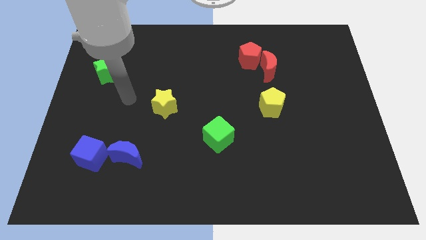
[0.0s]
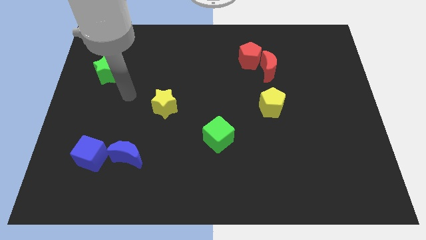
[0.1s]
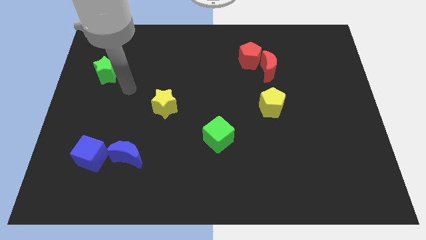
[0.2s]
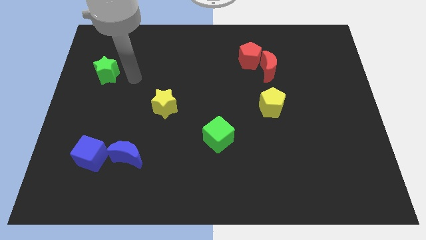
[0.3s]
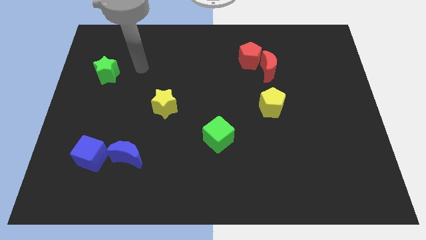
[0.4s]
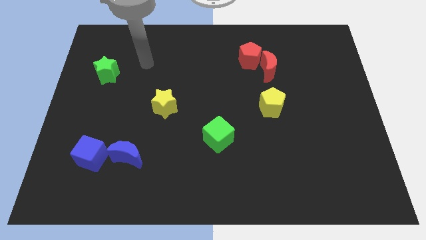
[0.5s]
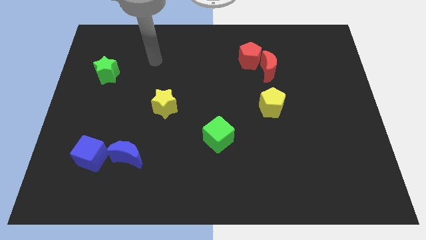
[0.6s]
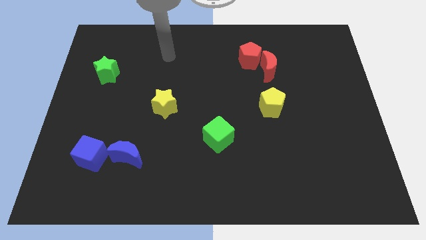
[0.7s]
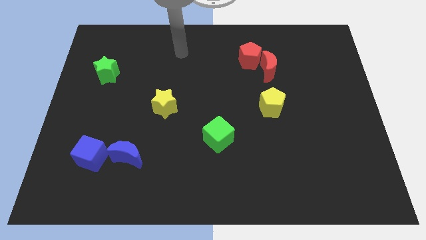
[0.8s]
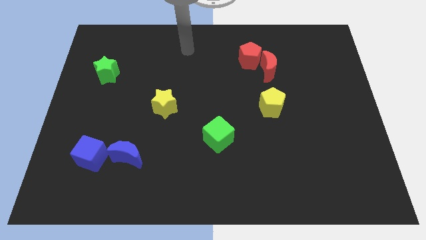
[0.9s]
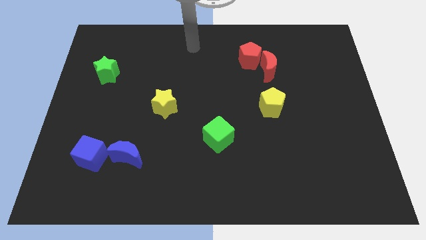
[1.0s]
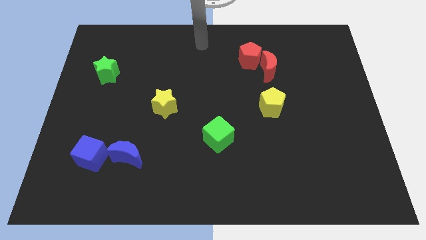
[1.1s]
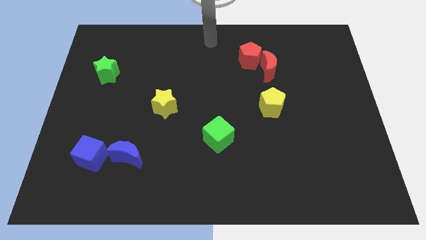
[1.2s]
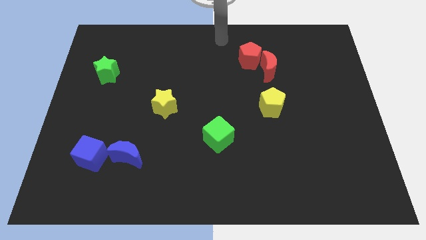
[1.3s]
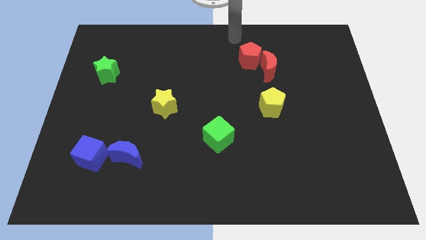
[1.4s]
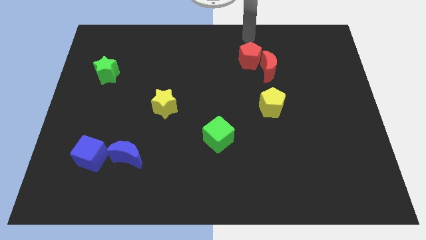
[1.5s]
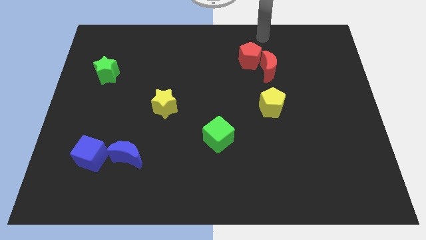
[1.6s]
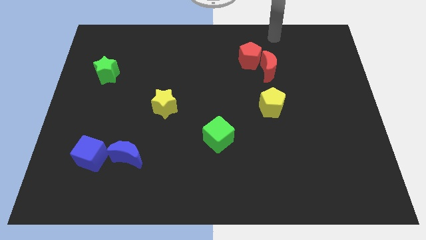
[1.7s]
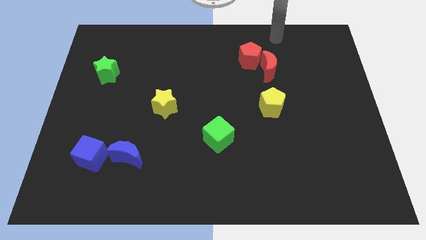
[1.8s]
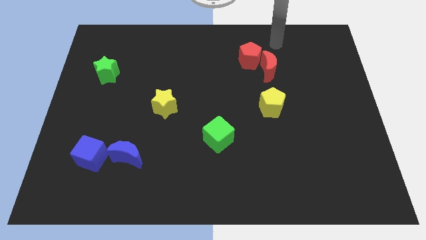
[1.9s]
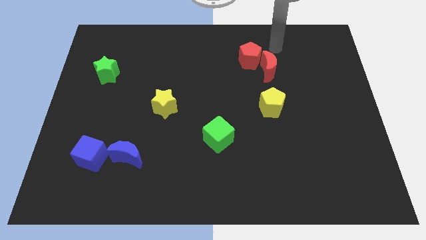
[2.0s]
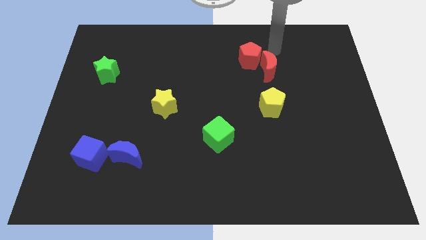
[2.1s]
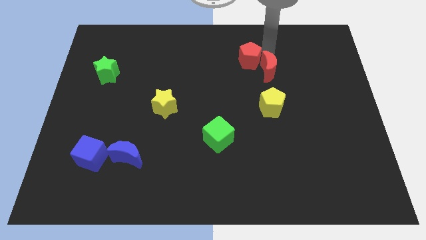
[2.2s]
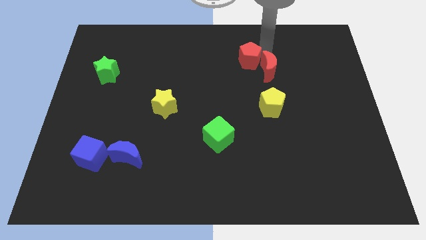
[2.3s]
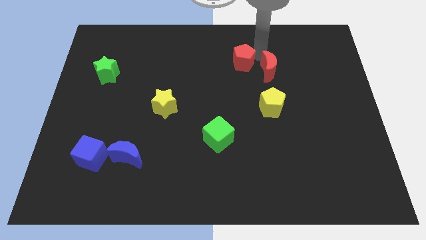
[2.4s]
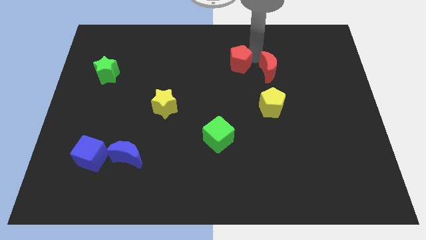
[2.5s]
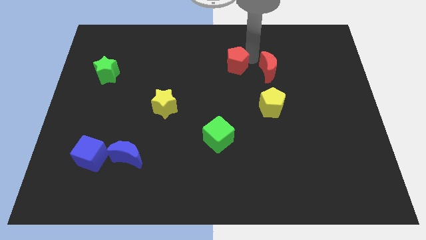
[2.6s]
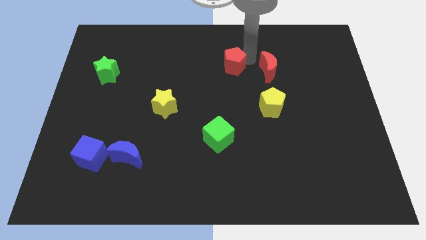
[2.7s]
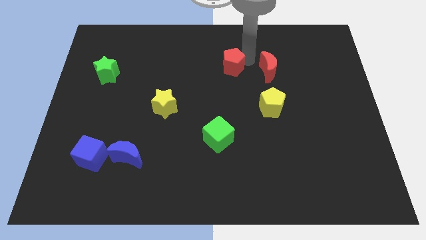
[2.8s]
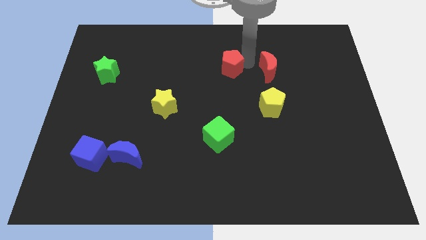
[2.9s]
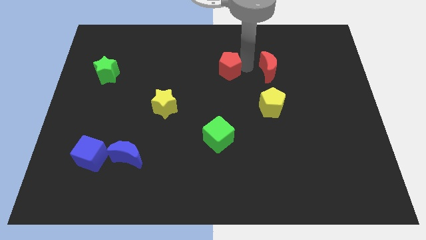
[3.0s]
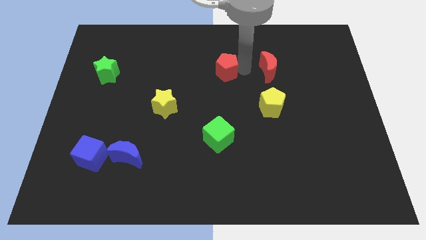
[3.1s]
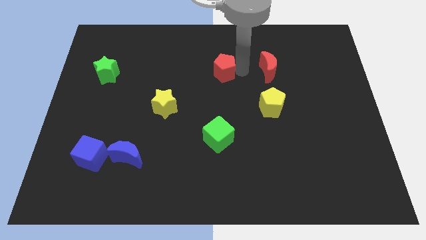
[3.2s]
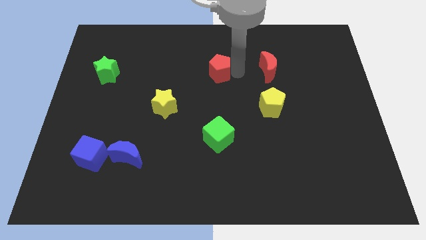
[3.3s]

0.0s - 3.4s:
separate the red pentagon and red crescent

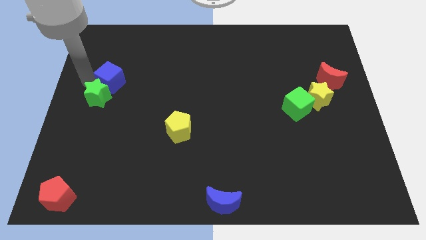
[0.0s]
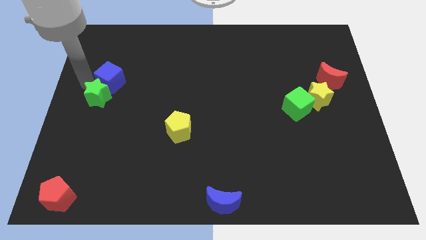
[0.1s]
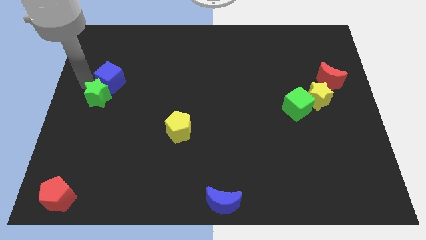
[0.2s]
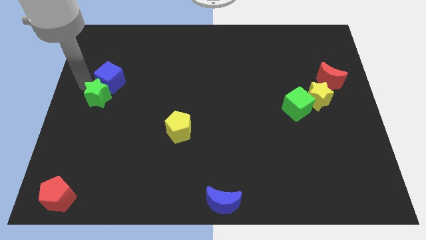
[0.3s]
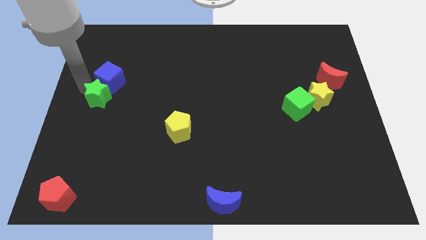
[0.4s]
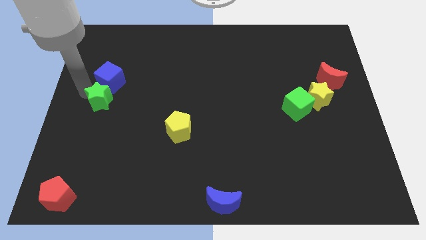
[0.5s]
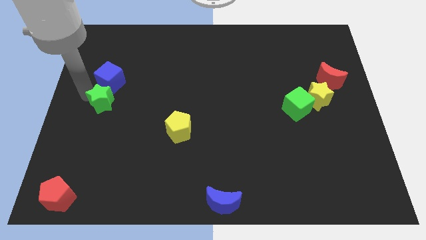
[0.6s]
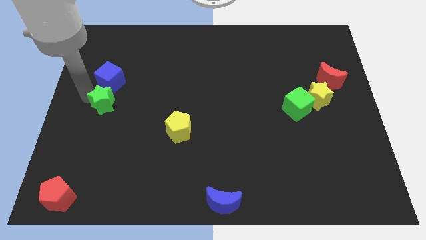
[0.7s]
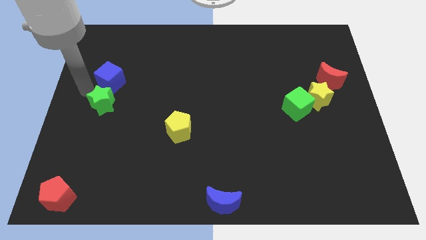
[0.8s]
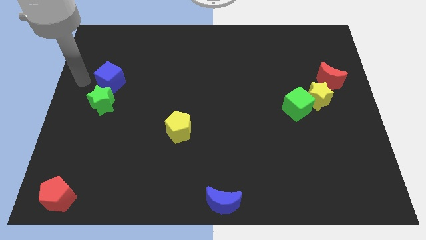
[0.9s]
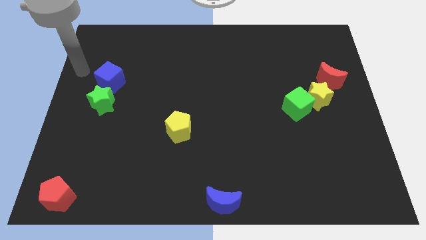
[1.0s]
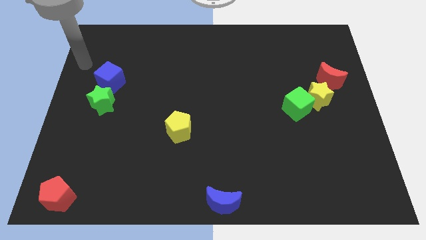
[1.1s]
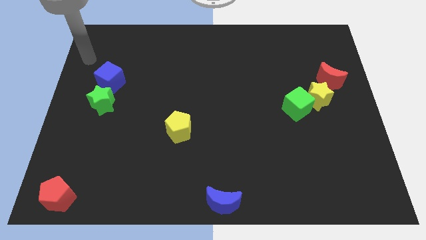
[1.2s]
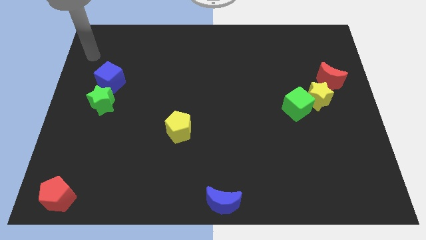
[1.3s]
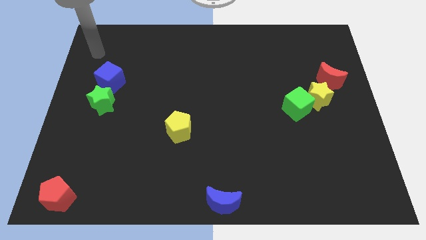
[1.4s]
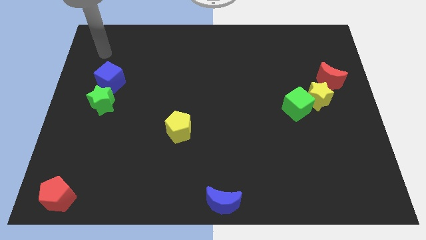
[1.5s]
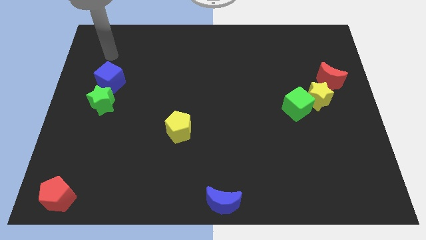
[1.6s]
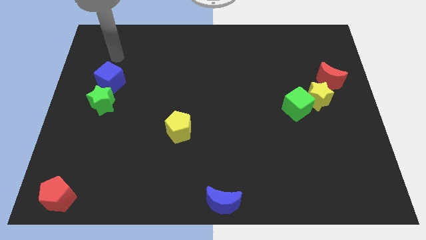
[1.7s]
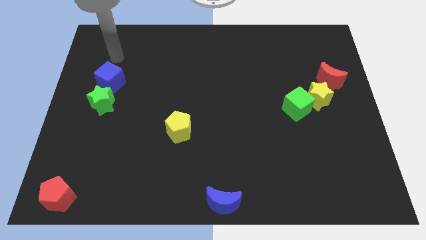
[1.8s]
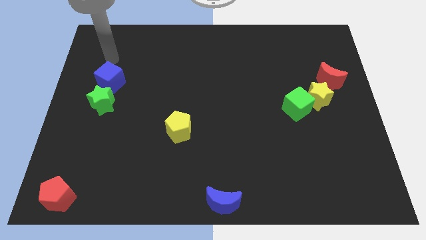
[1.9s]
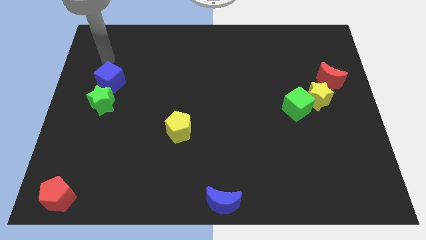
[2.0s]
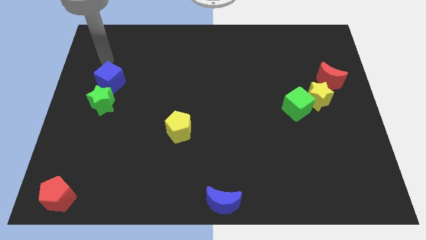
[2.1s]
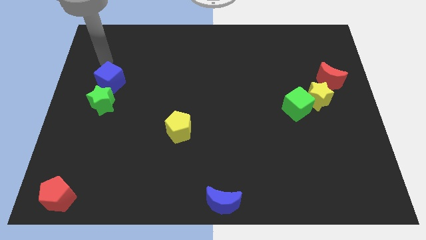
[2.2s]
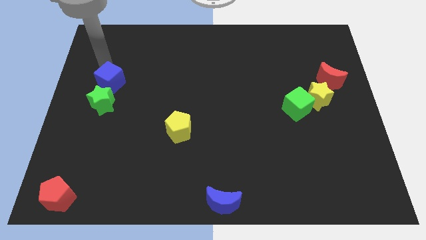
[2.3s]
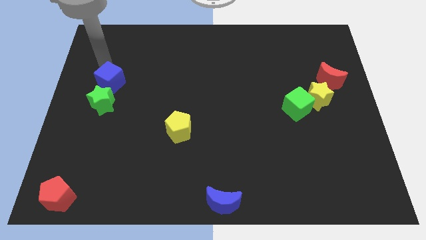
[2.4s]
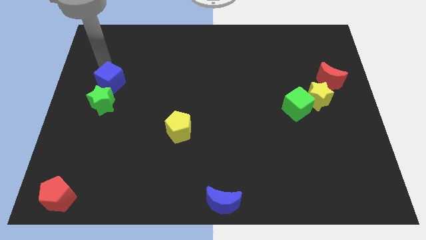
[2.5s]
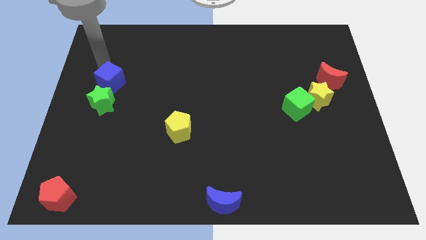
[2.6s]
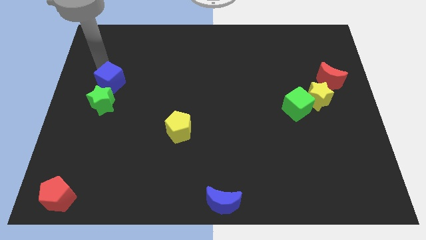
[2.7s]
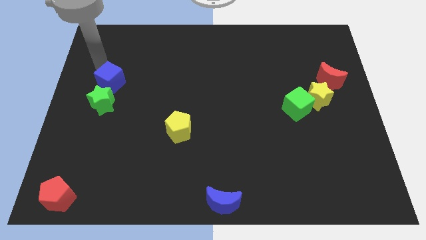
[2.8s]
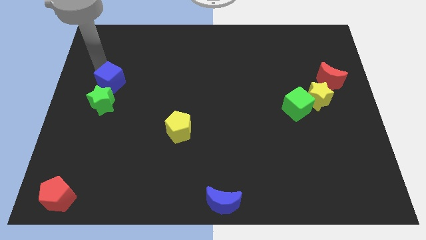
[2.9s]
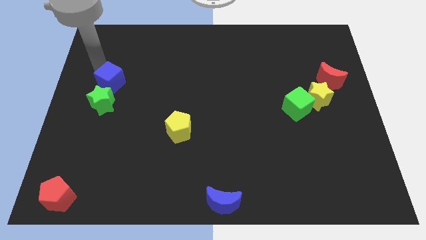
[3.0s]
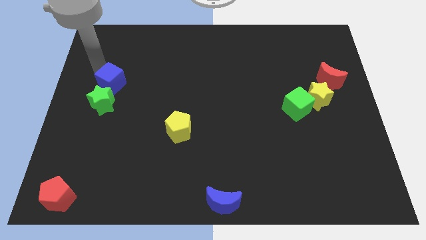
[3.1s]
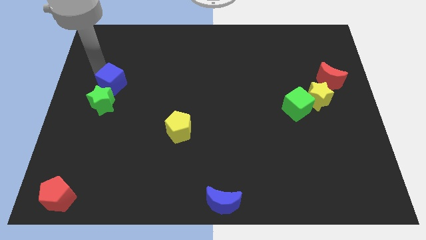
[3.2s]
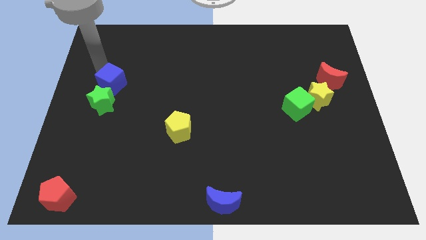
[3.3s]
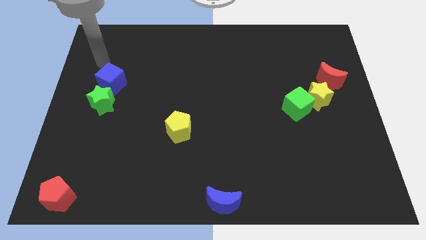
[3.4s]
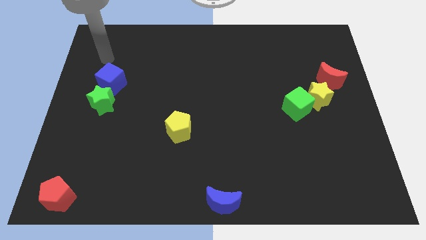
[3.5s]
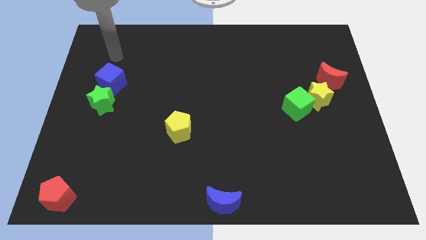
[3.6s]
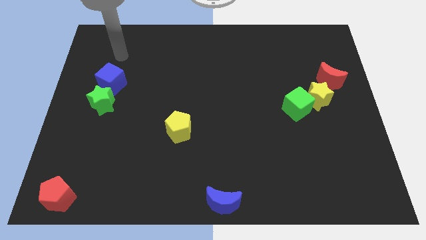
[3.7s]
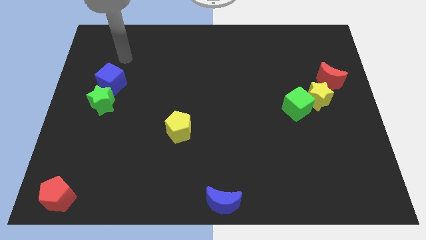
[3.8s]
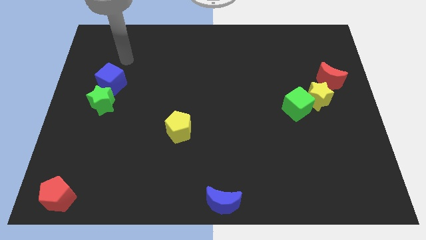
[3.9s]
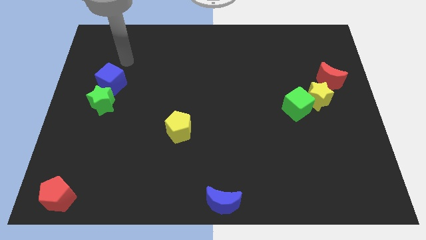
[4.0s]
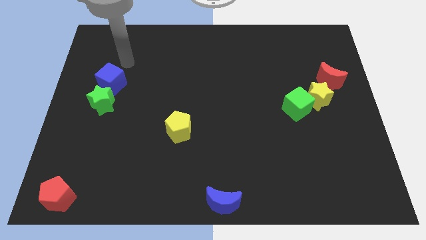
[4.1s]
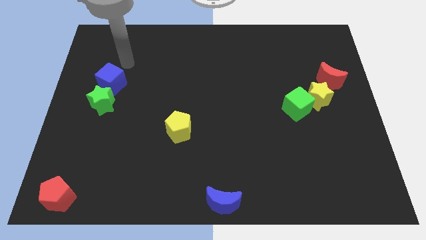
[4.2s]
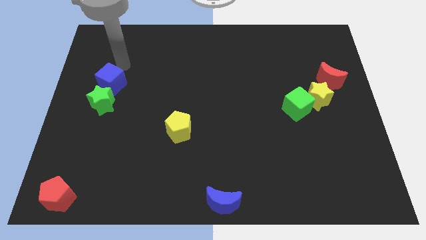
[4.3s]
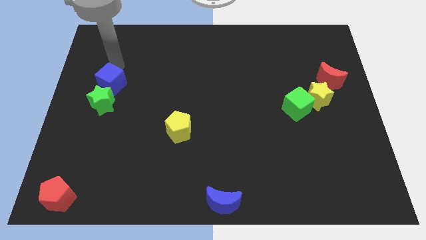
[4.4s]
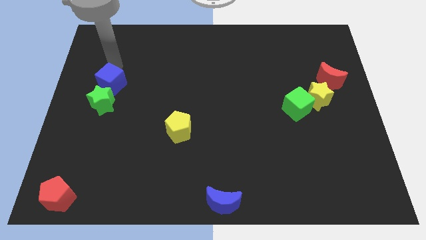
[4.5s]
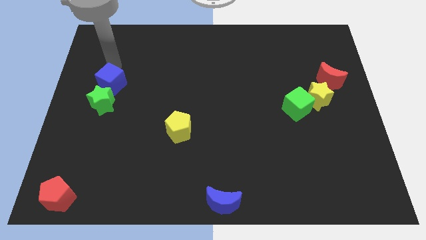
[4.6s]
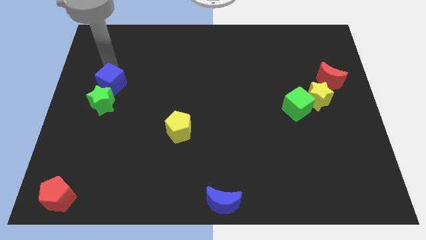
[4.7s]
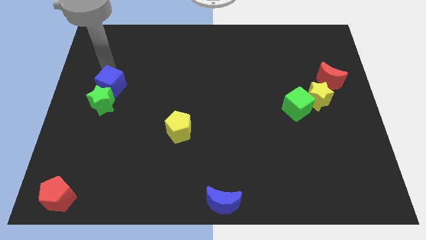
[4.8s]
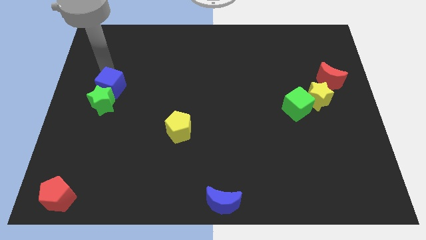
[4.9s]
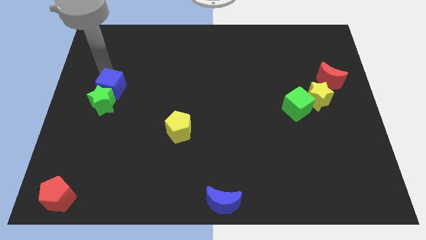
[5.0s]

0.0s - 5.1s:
move blue cube close to the green star

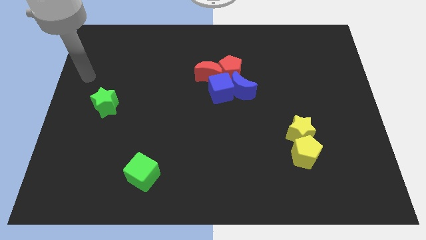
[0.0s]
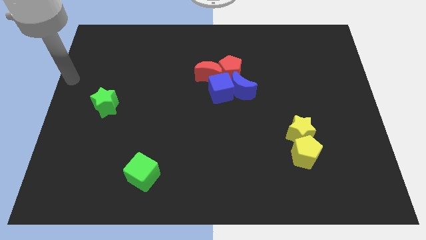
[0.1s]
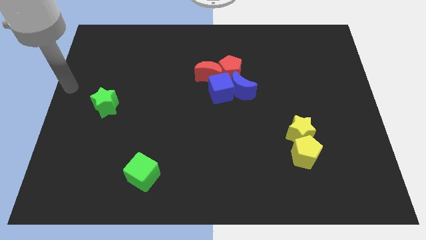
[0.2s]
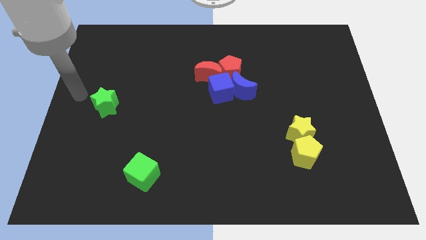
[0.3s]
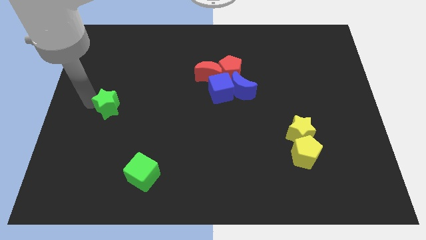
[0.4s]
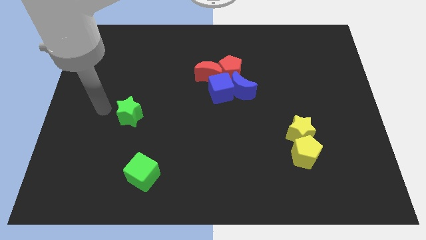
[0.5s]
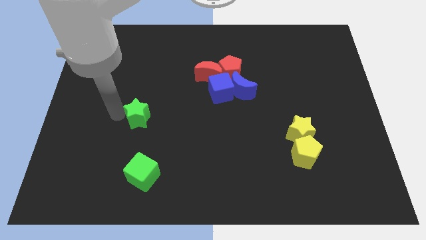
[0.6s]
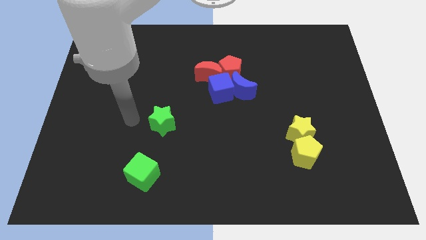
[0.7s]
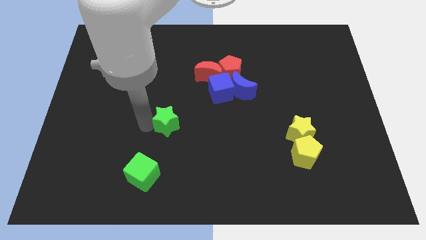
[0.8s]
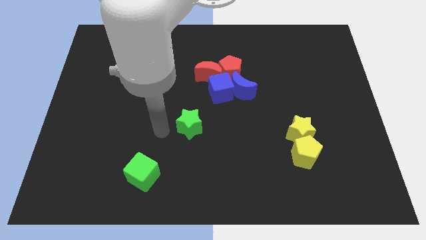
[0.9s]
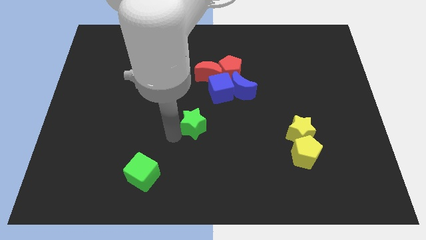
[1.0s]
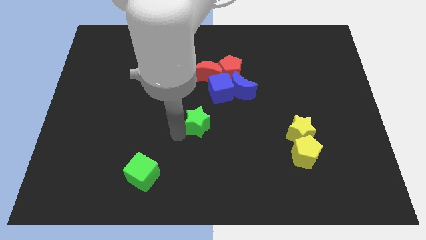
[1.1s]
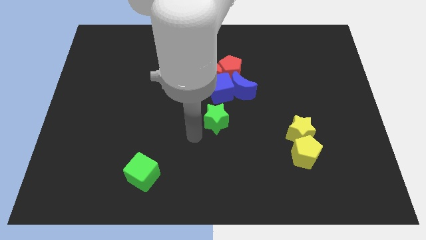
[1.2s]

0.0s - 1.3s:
push the green star towards the bottom right
